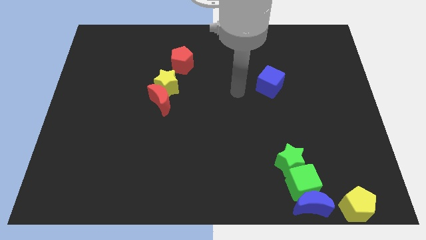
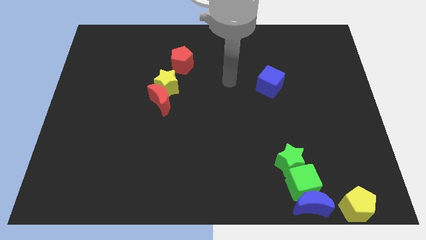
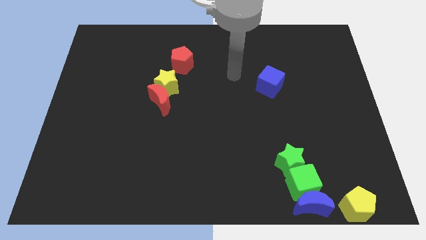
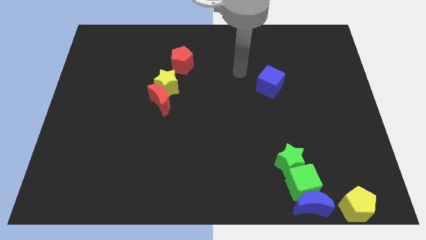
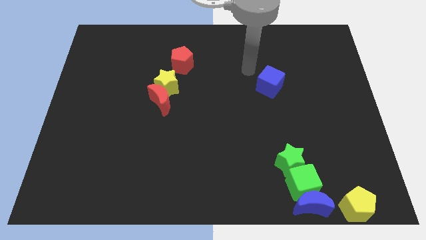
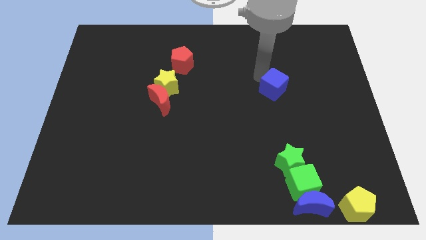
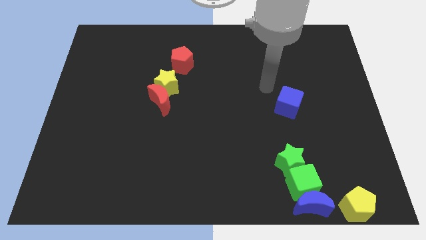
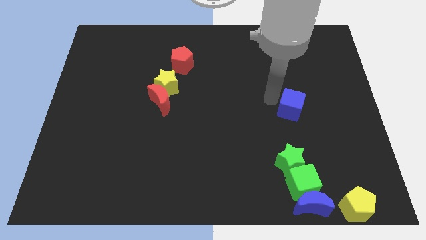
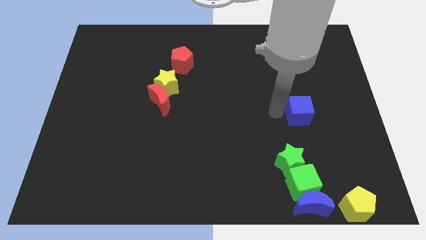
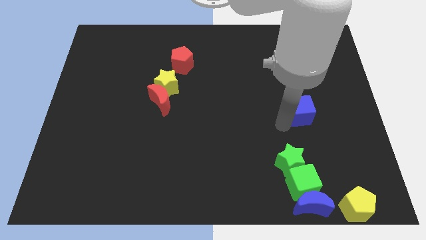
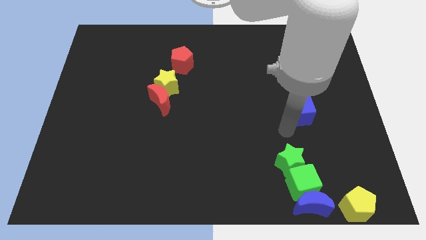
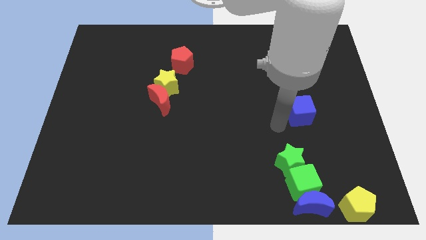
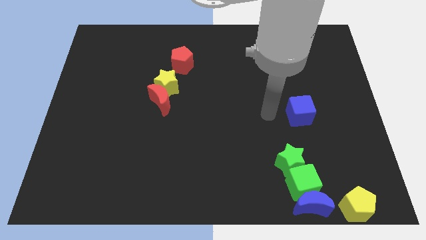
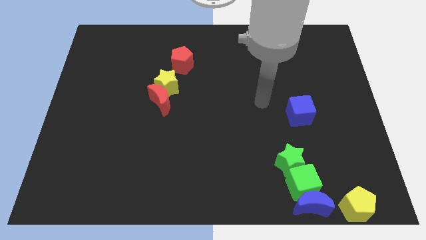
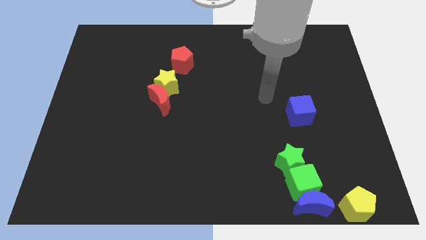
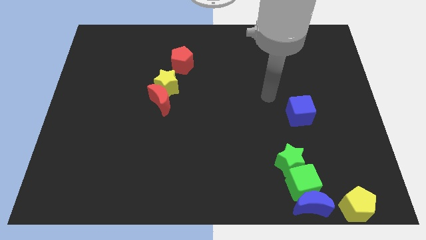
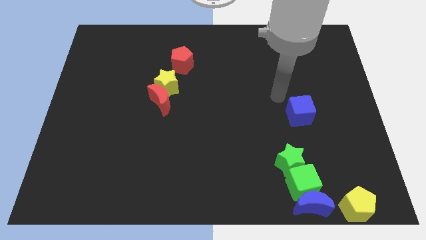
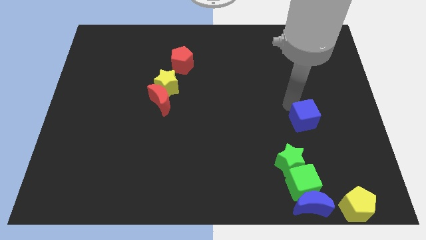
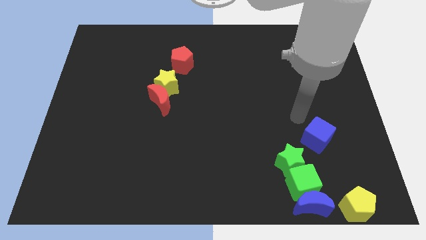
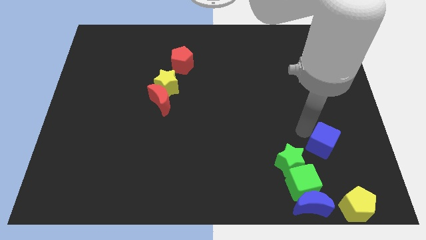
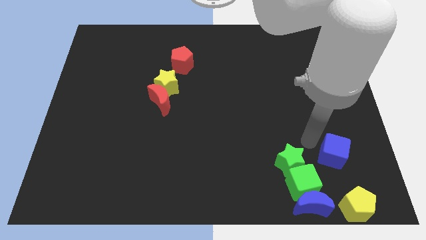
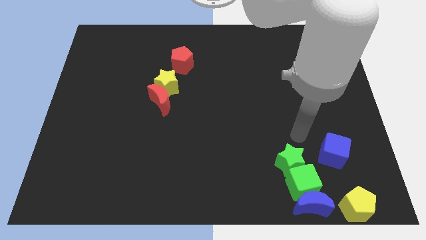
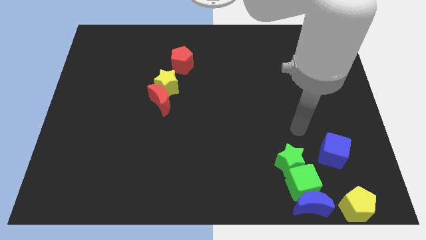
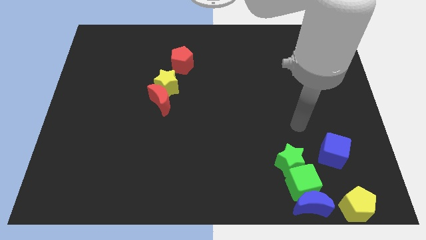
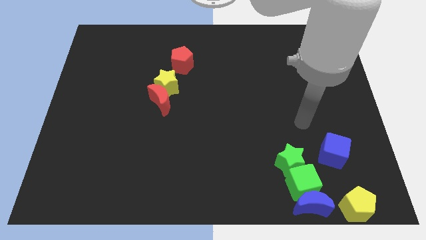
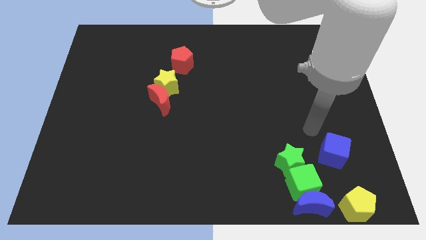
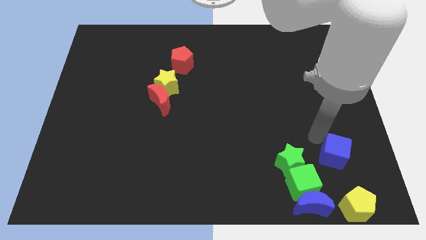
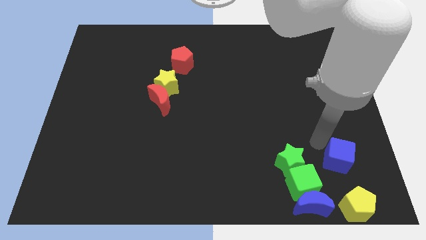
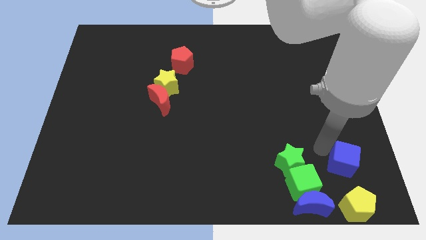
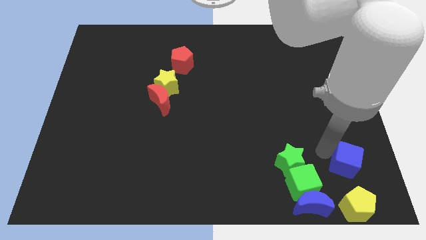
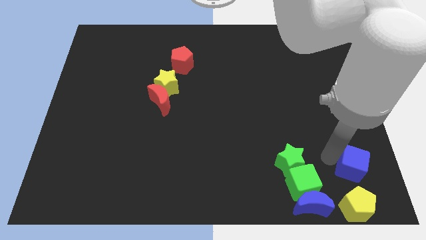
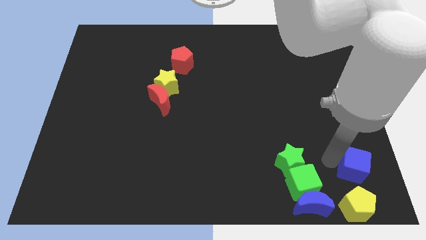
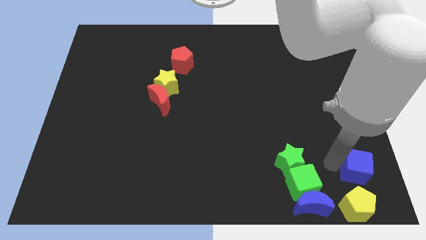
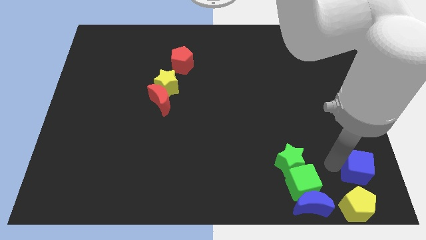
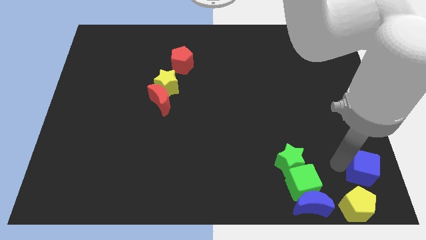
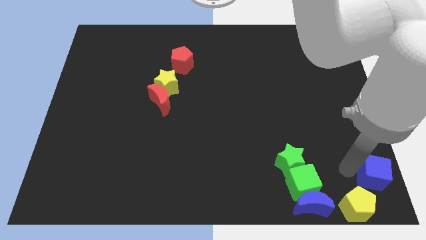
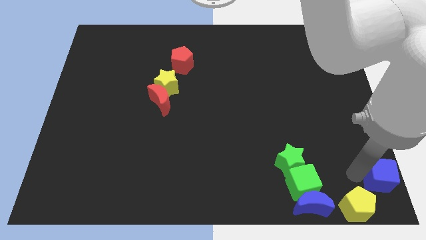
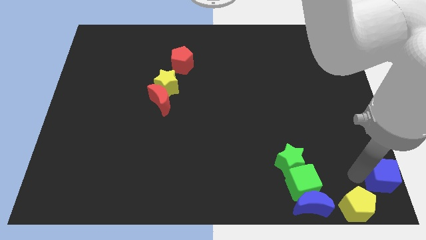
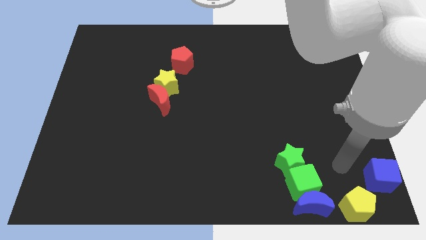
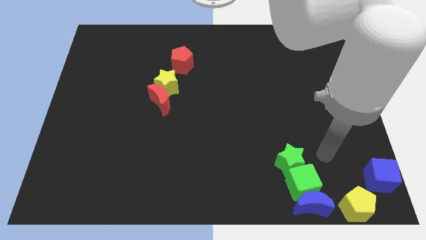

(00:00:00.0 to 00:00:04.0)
push the blue cube towards the bottom right corner

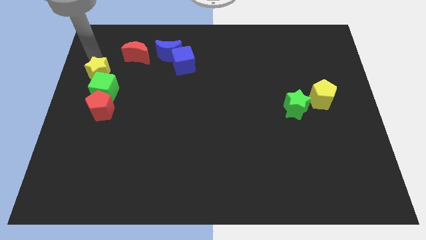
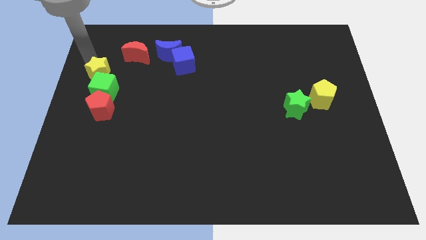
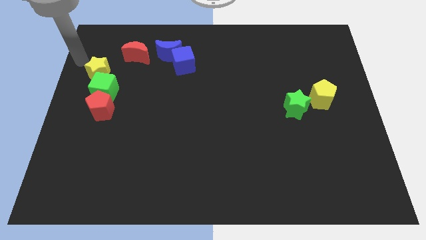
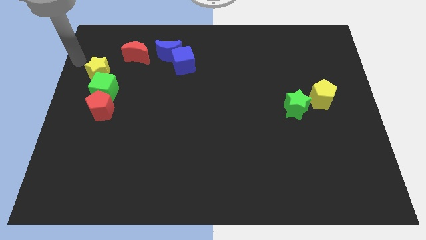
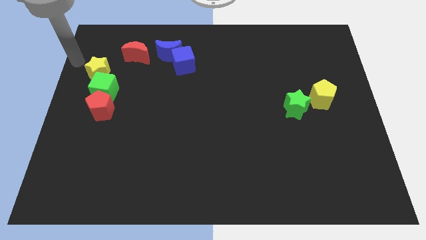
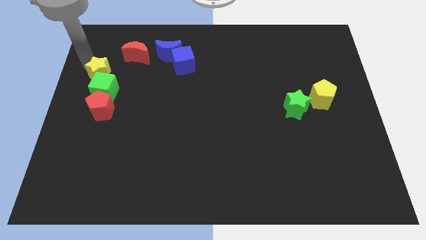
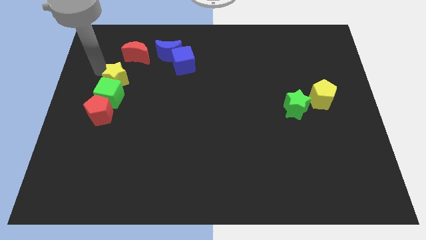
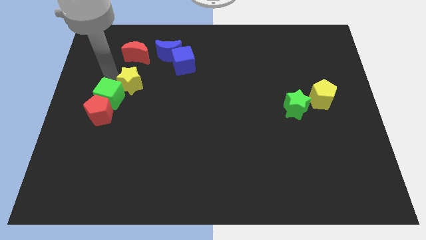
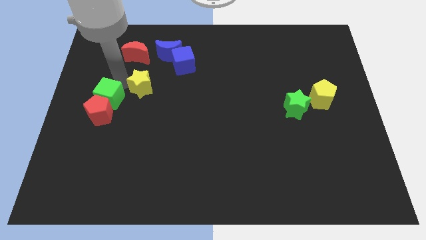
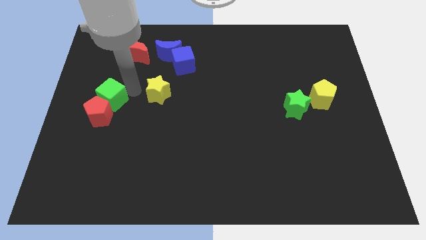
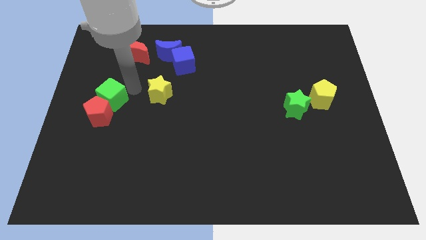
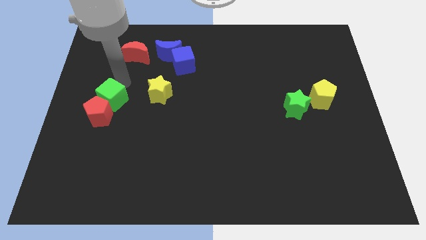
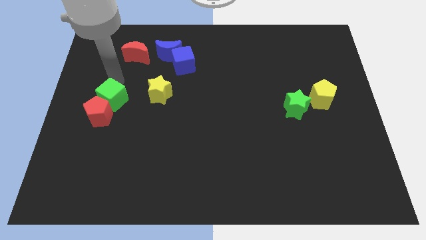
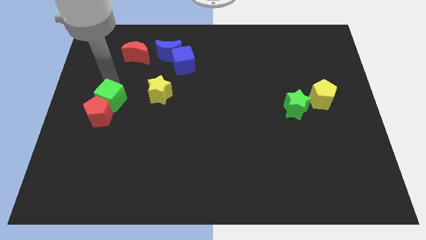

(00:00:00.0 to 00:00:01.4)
separate the yellow star away from the green cube

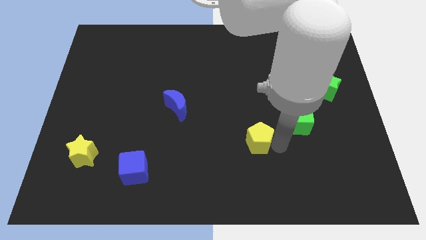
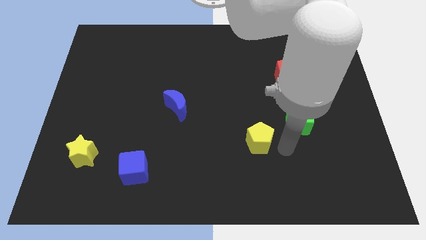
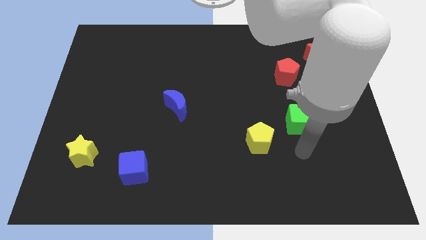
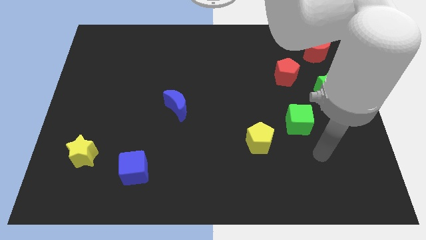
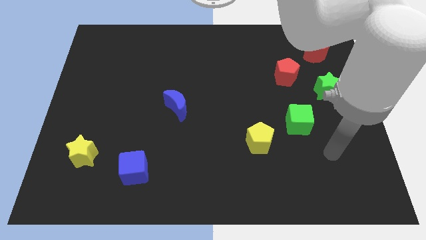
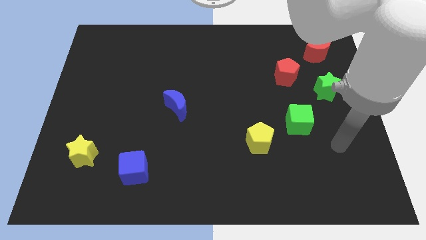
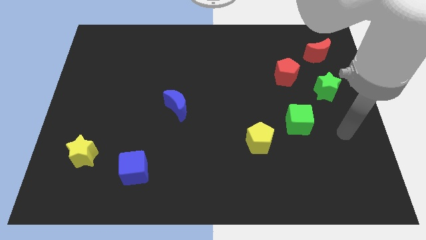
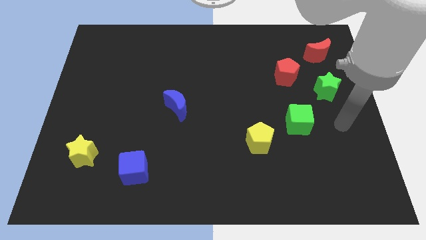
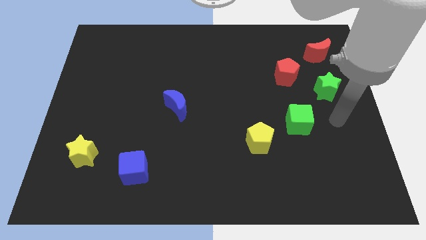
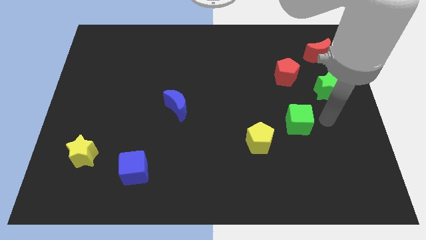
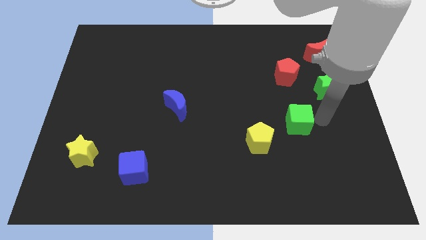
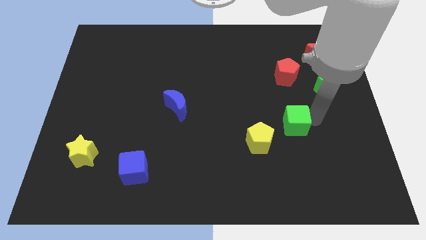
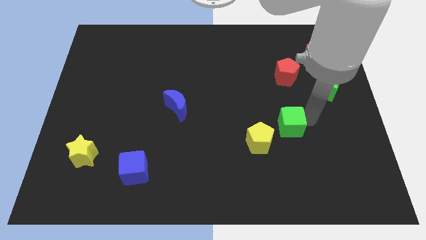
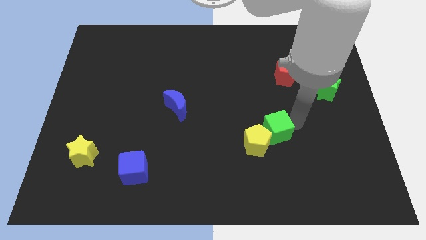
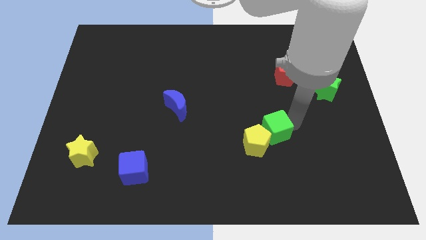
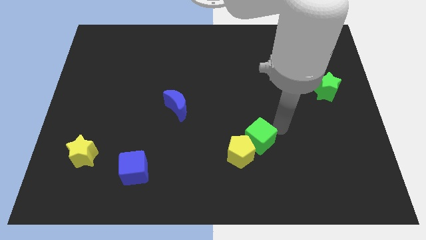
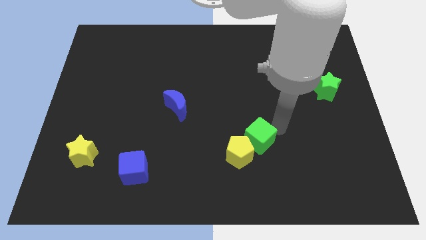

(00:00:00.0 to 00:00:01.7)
push the green cube and yellow pentagon towards the bottom side of the board

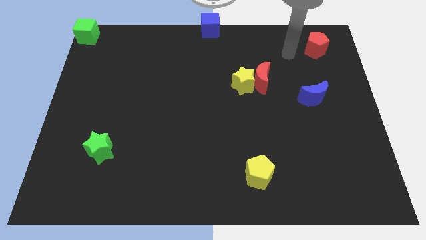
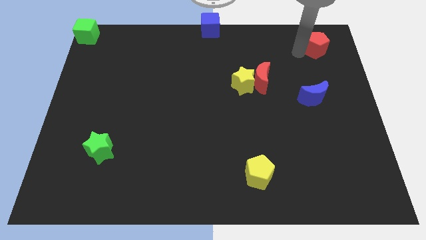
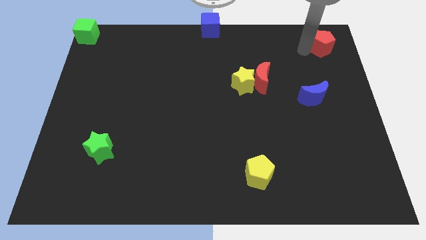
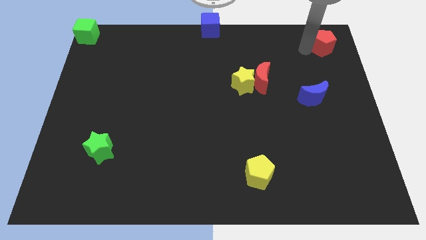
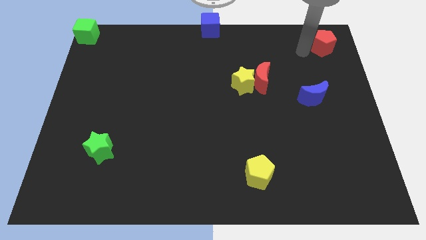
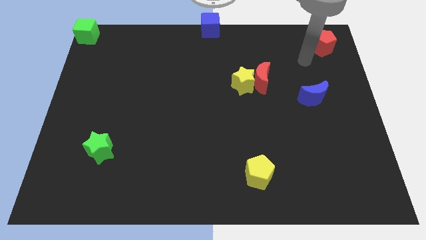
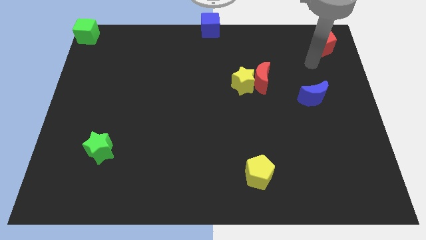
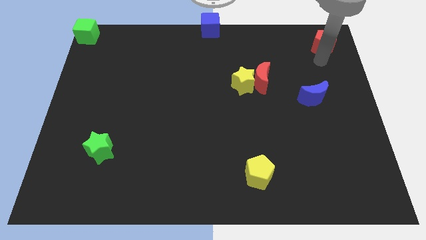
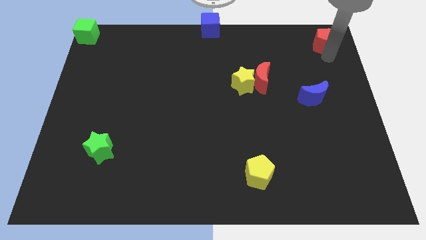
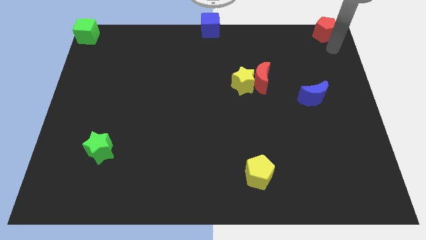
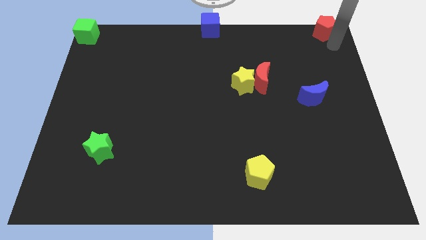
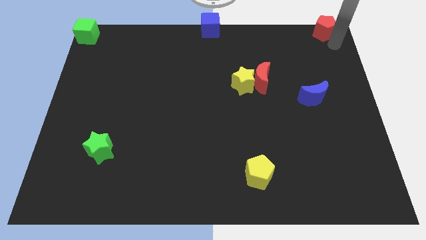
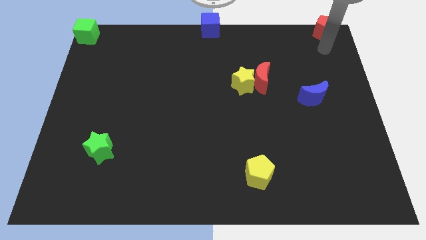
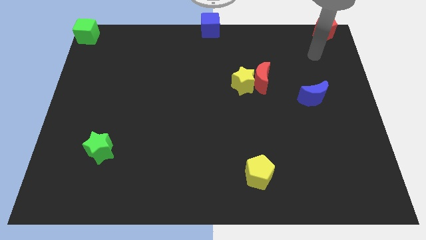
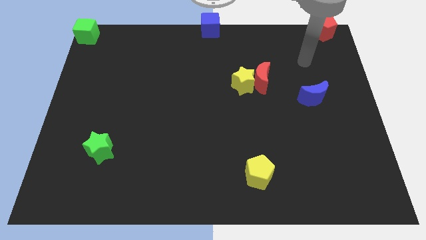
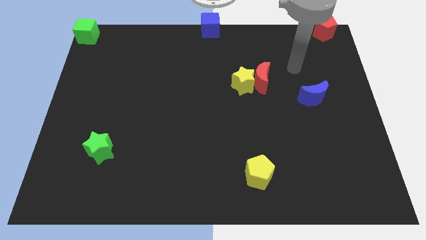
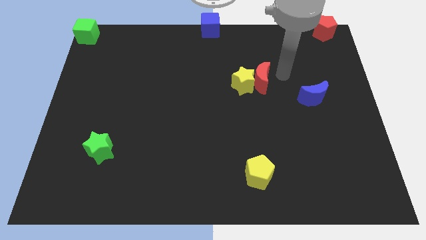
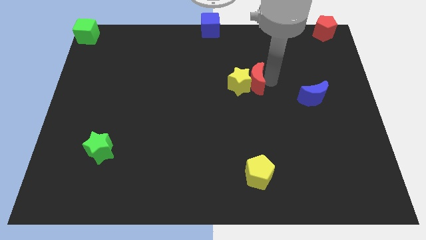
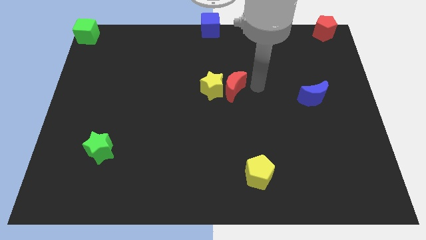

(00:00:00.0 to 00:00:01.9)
push the red moon
